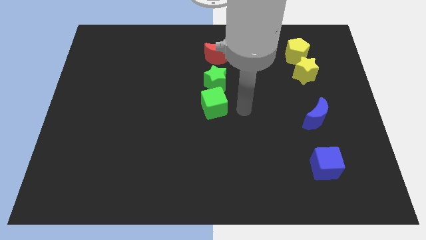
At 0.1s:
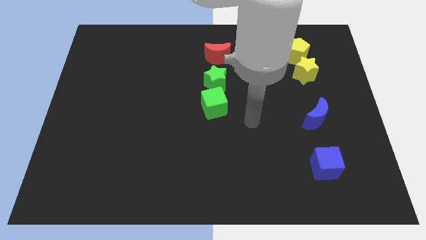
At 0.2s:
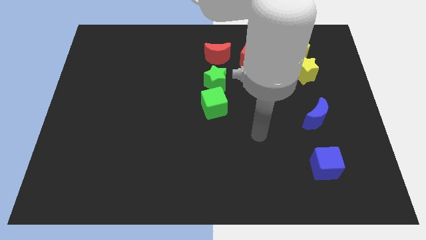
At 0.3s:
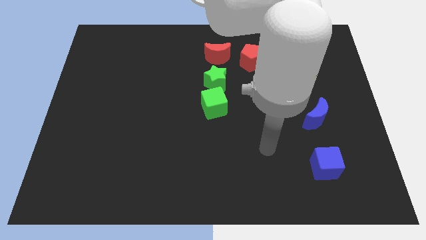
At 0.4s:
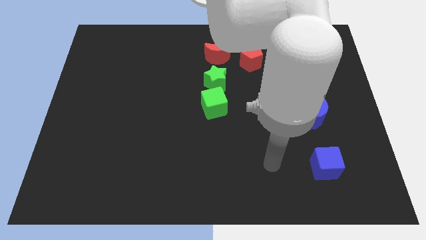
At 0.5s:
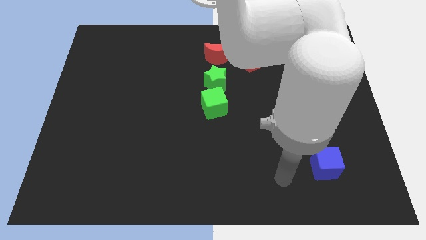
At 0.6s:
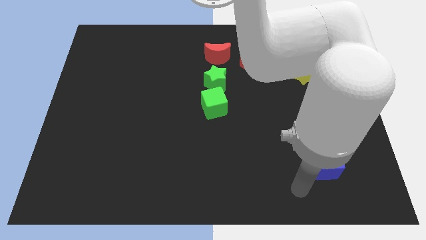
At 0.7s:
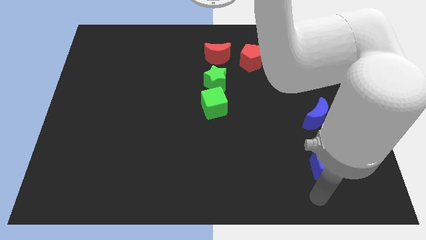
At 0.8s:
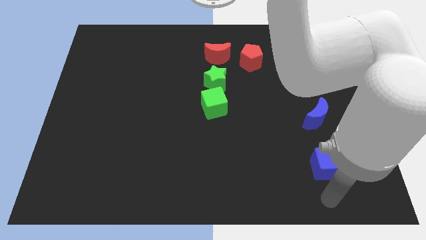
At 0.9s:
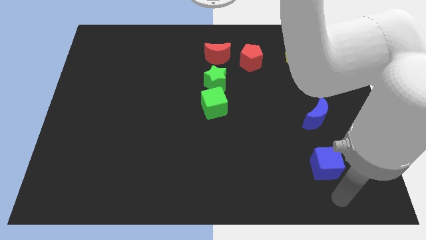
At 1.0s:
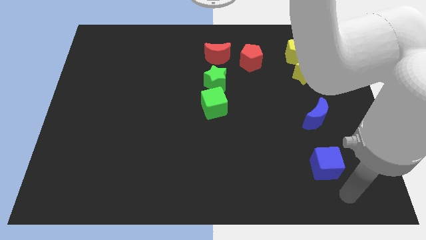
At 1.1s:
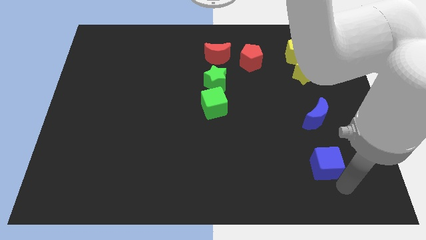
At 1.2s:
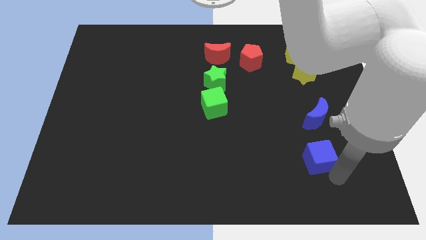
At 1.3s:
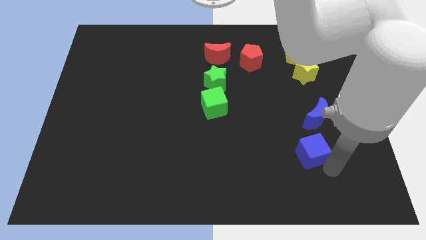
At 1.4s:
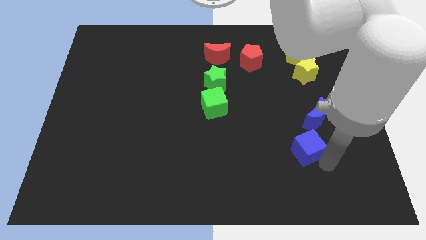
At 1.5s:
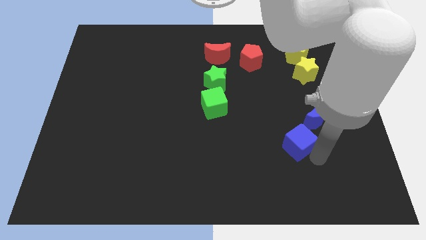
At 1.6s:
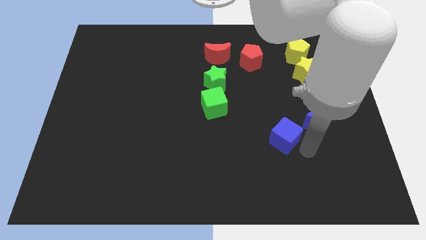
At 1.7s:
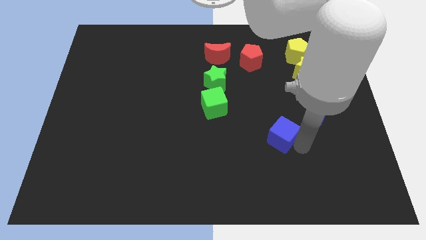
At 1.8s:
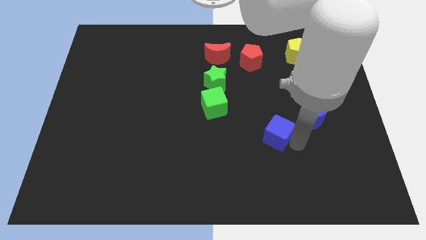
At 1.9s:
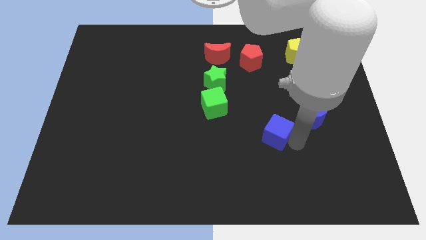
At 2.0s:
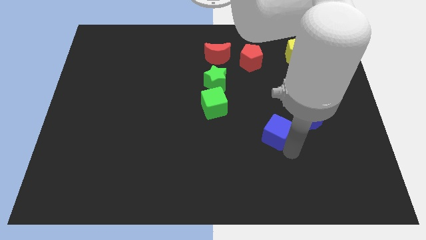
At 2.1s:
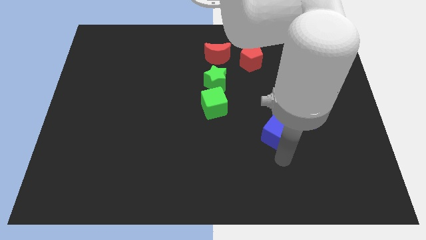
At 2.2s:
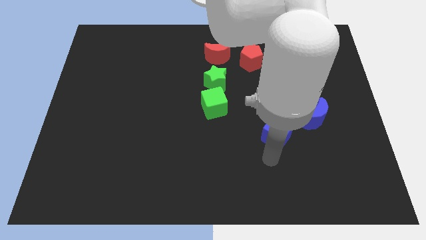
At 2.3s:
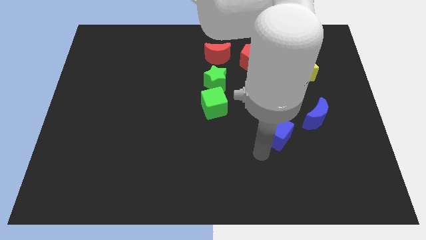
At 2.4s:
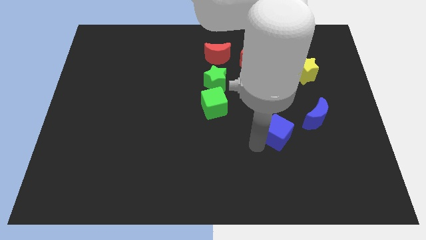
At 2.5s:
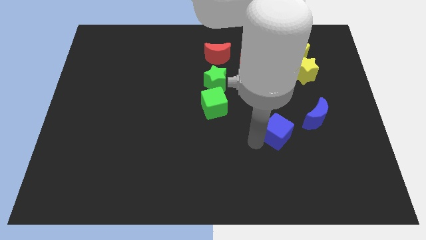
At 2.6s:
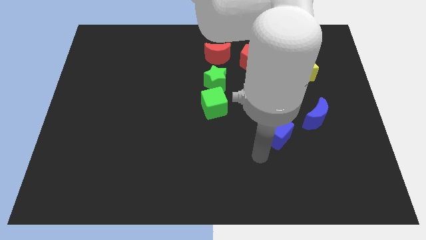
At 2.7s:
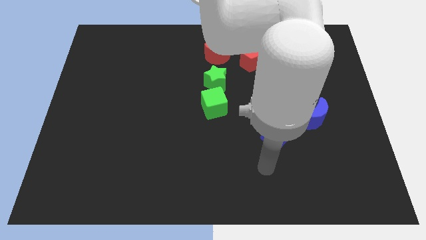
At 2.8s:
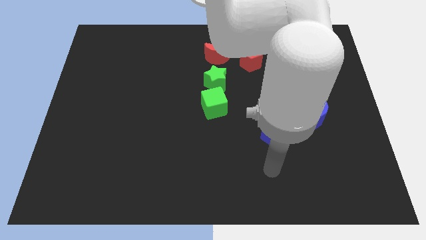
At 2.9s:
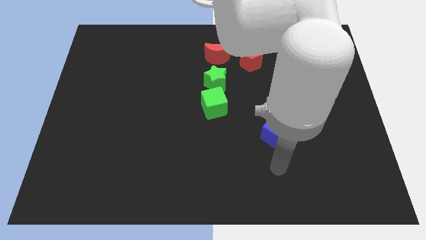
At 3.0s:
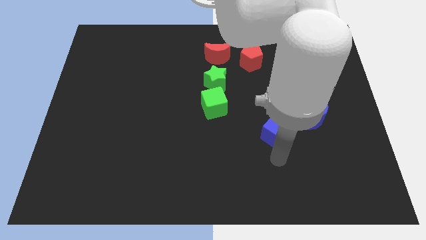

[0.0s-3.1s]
place the blue cube bottom left to the blue moon

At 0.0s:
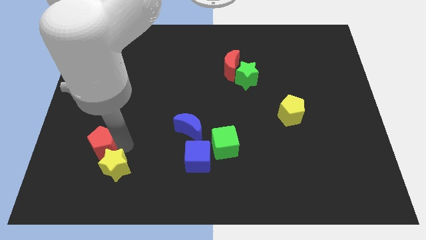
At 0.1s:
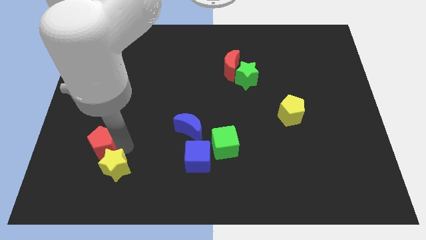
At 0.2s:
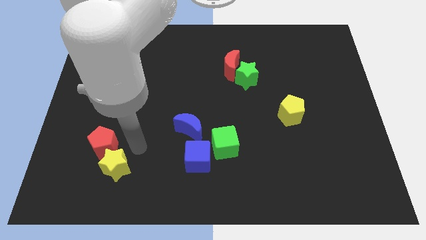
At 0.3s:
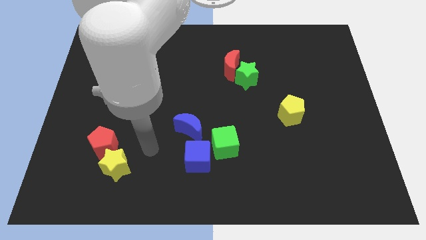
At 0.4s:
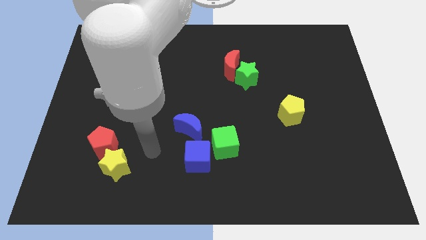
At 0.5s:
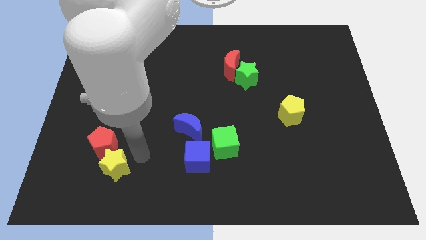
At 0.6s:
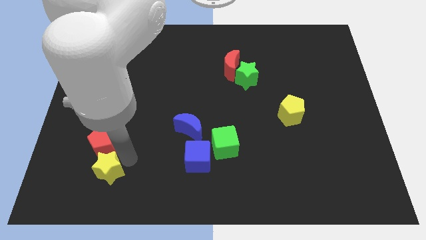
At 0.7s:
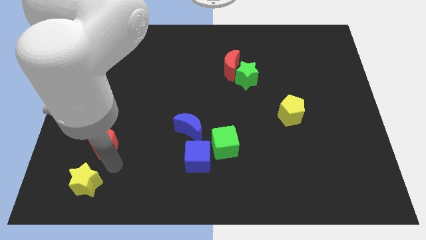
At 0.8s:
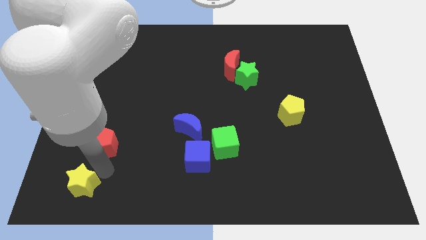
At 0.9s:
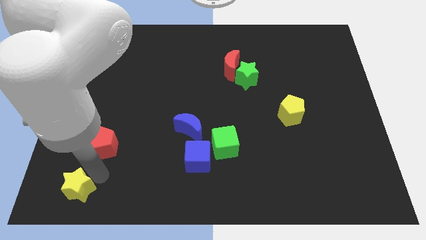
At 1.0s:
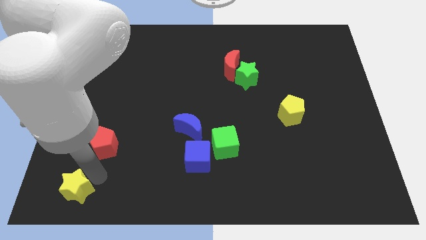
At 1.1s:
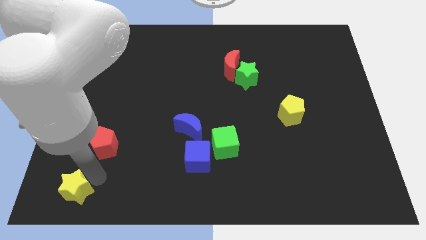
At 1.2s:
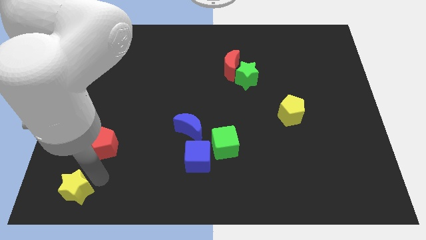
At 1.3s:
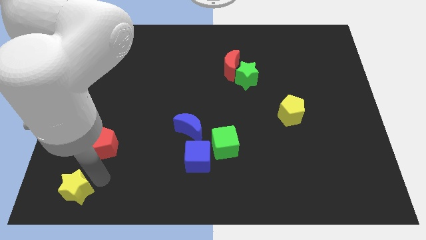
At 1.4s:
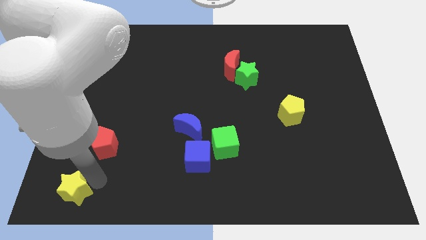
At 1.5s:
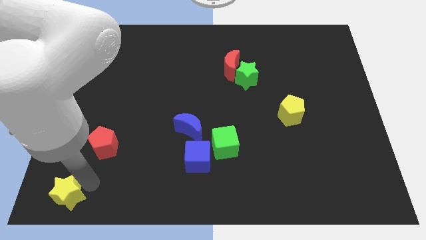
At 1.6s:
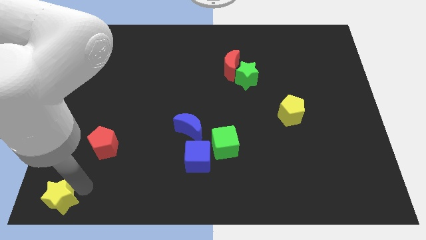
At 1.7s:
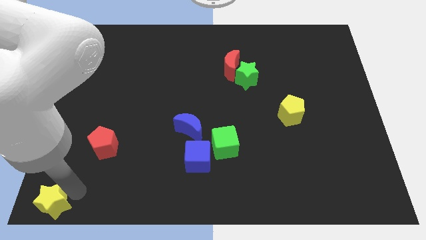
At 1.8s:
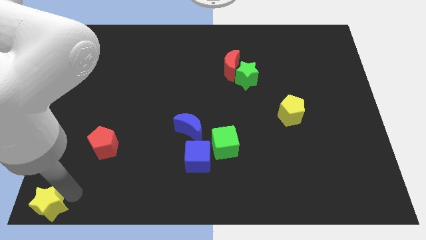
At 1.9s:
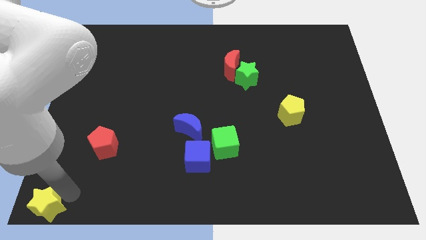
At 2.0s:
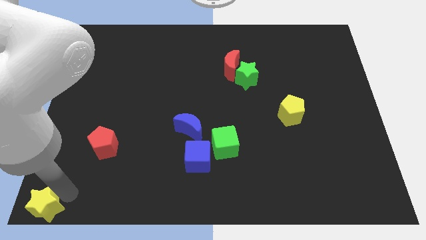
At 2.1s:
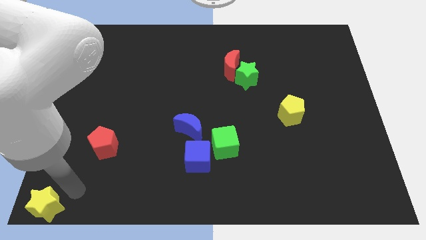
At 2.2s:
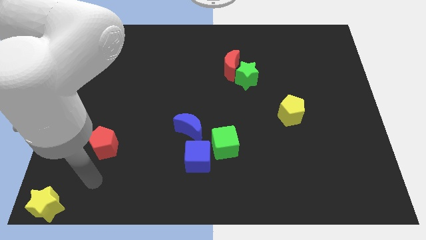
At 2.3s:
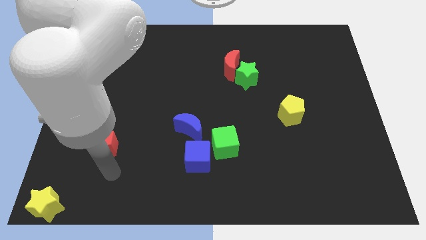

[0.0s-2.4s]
place the yellow star to the bottom left of the board

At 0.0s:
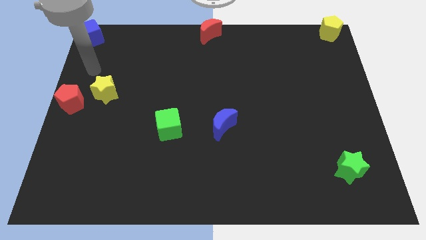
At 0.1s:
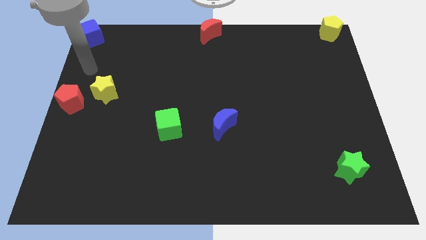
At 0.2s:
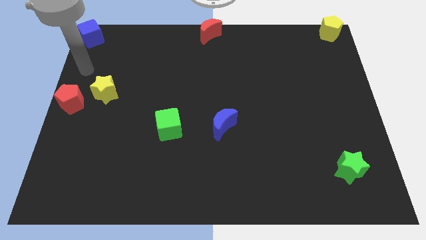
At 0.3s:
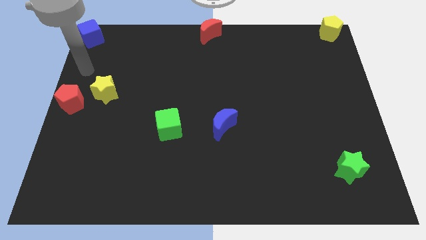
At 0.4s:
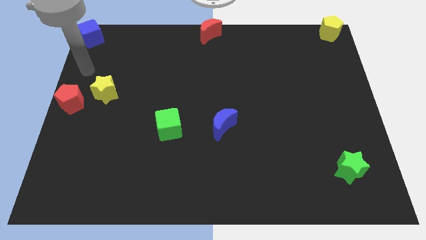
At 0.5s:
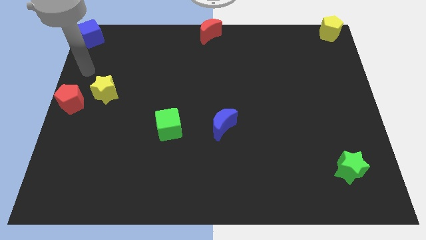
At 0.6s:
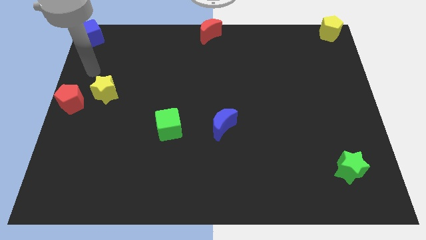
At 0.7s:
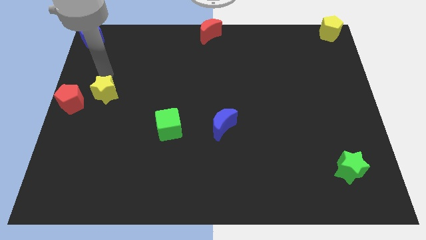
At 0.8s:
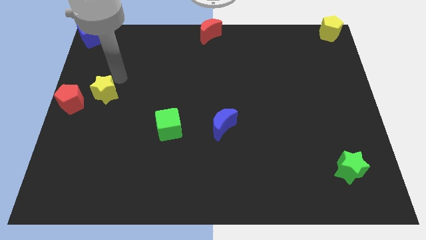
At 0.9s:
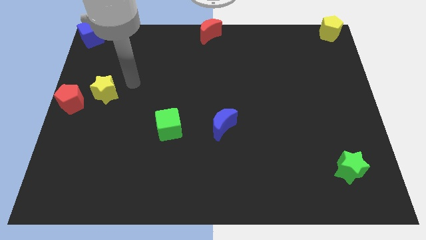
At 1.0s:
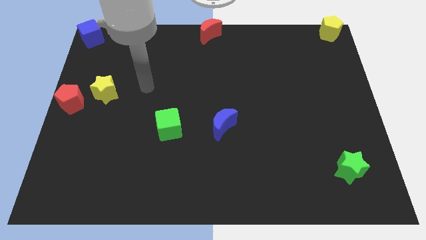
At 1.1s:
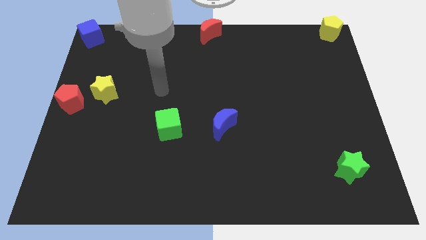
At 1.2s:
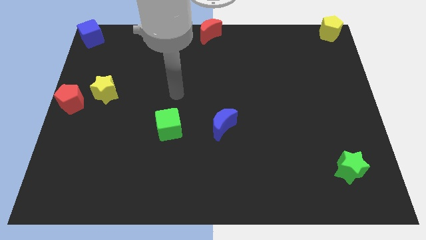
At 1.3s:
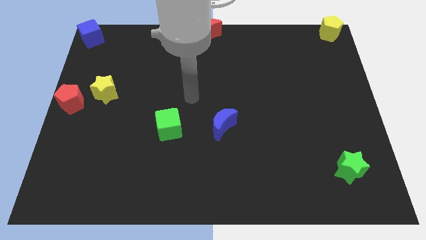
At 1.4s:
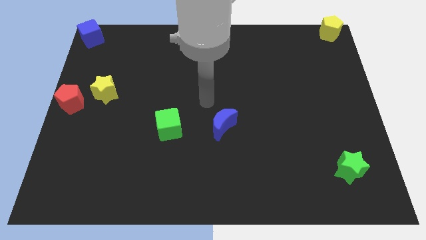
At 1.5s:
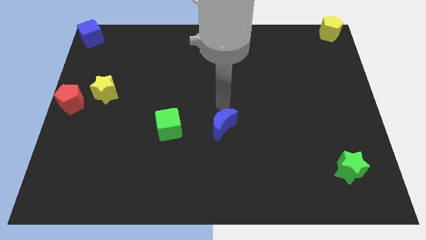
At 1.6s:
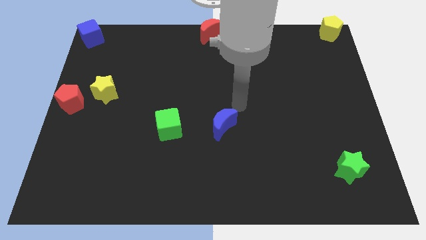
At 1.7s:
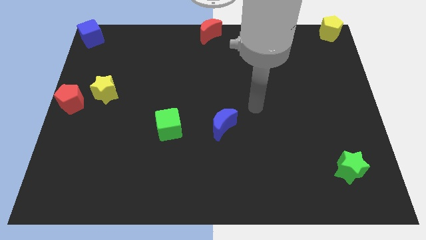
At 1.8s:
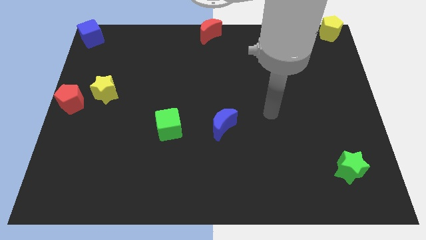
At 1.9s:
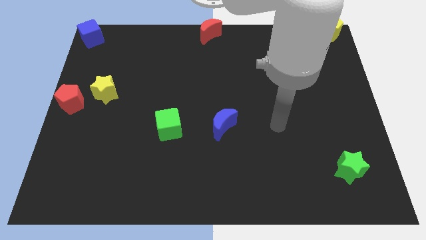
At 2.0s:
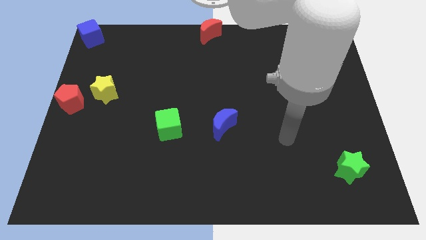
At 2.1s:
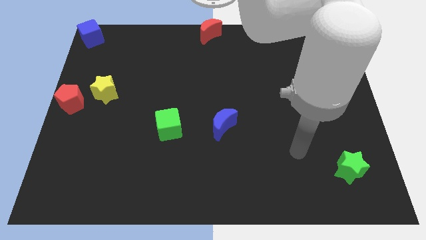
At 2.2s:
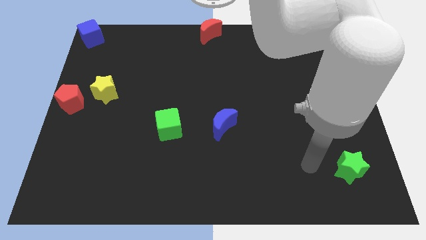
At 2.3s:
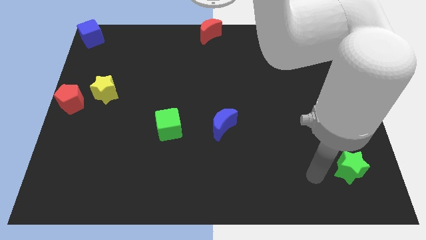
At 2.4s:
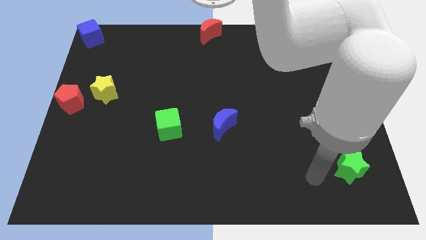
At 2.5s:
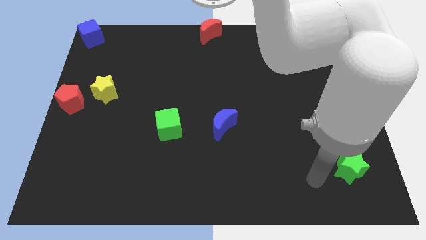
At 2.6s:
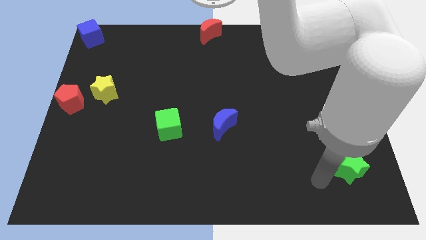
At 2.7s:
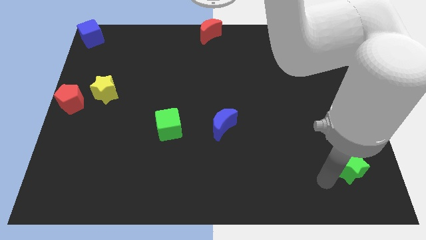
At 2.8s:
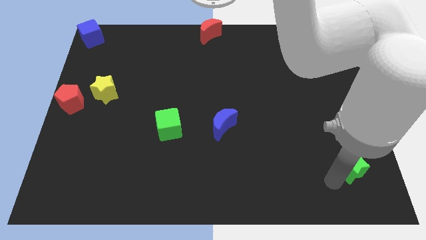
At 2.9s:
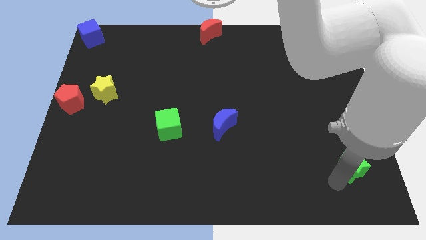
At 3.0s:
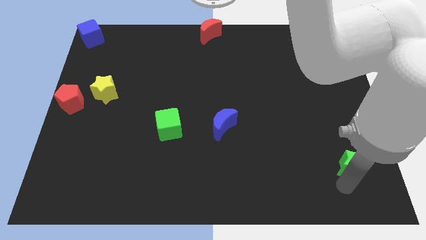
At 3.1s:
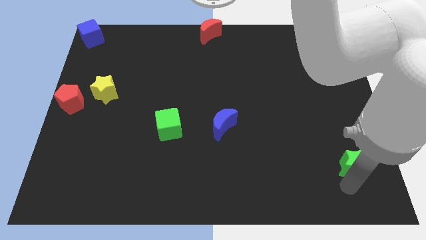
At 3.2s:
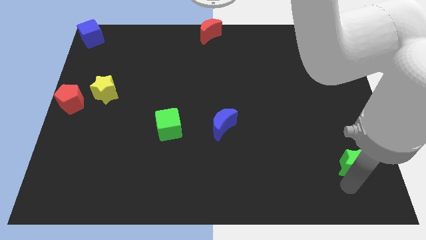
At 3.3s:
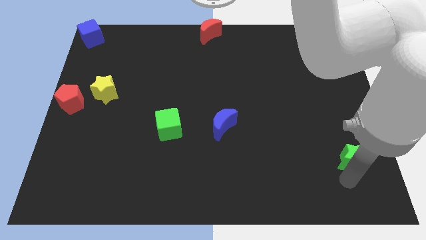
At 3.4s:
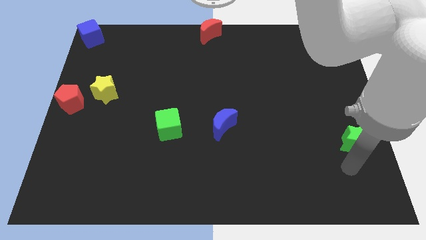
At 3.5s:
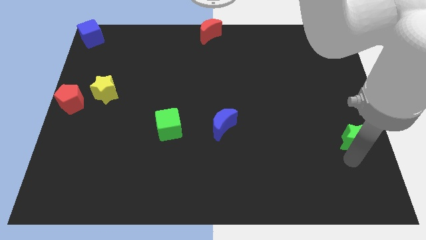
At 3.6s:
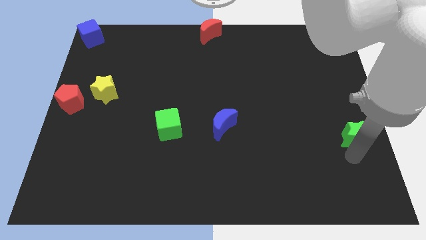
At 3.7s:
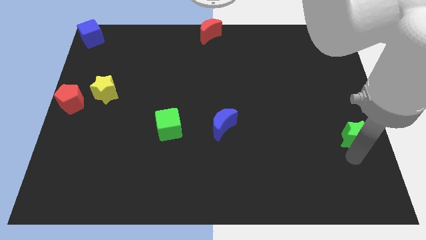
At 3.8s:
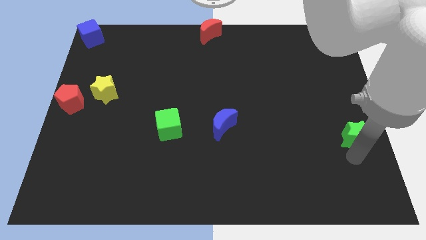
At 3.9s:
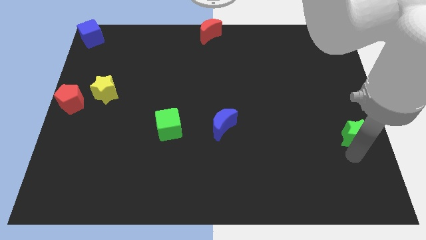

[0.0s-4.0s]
move the green star upwards
